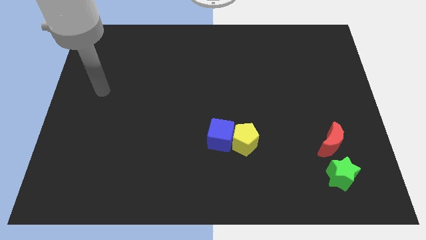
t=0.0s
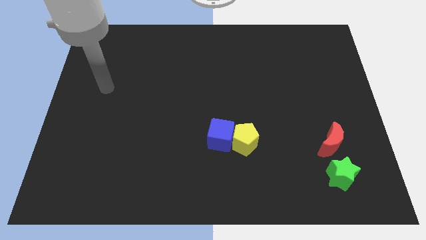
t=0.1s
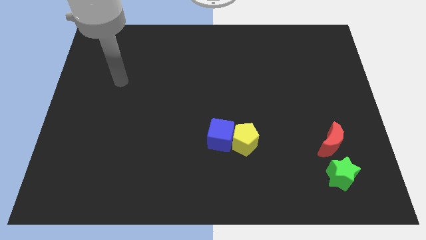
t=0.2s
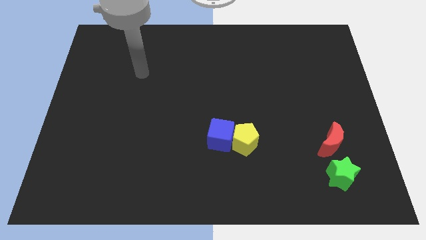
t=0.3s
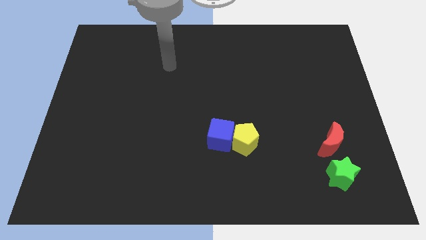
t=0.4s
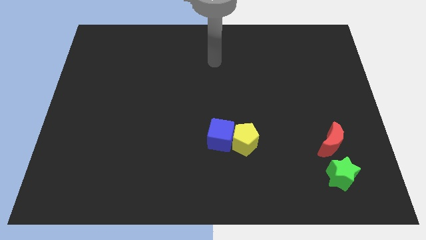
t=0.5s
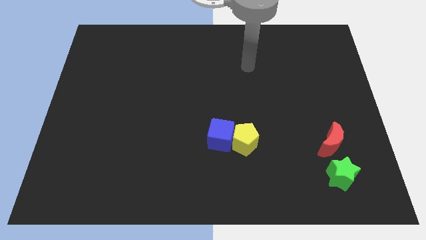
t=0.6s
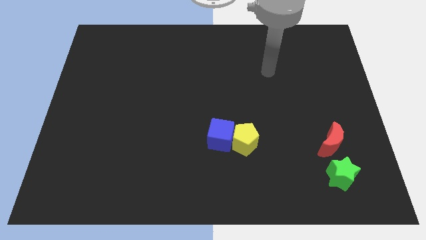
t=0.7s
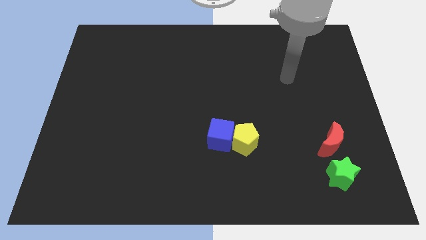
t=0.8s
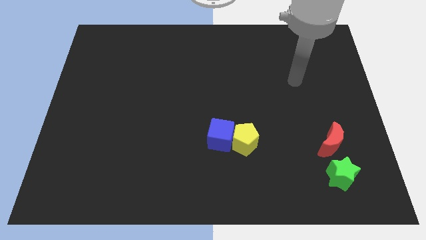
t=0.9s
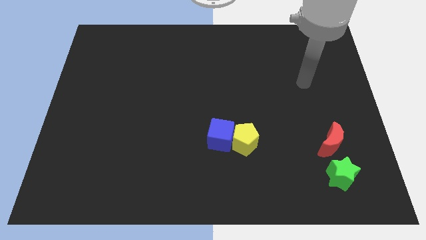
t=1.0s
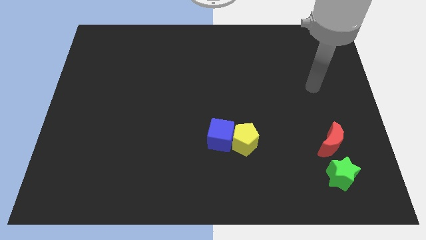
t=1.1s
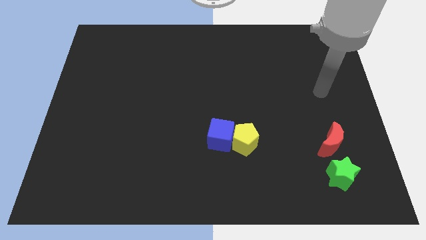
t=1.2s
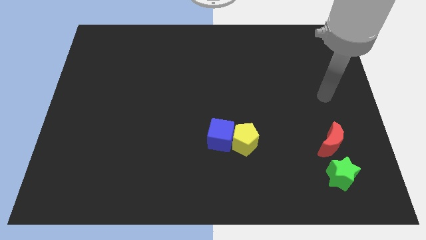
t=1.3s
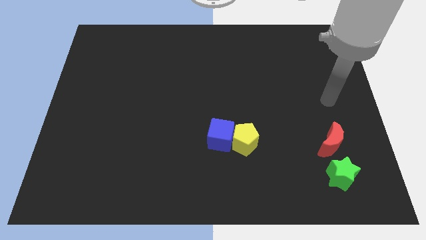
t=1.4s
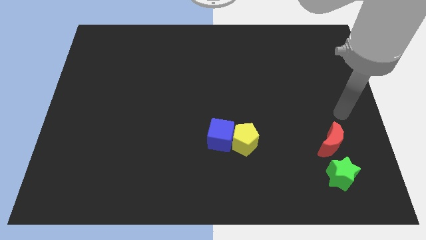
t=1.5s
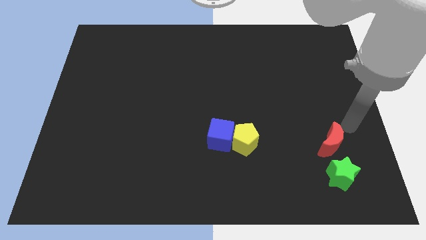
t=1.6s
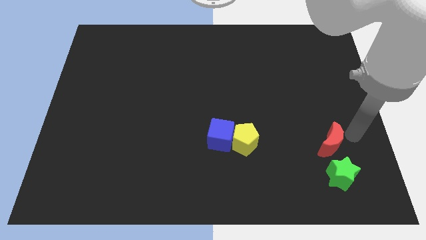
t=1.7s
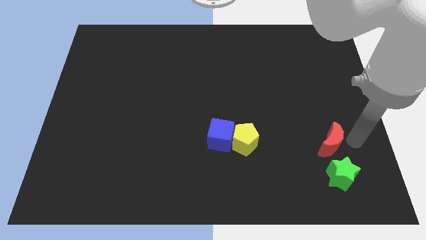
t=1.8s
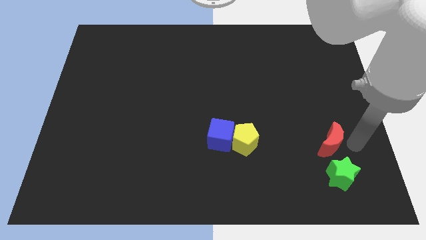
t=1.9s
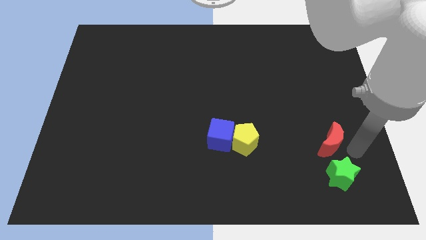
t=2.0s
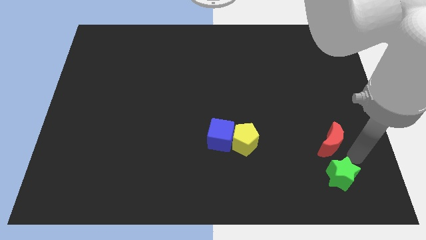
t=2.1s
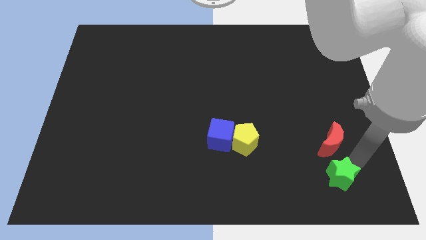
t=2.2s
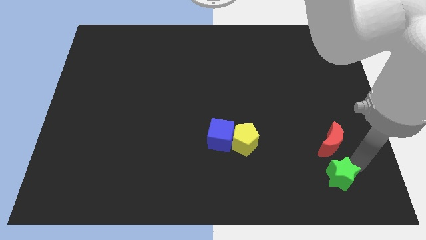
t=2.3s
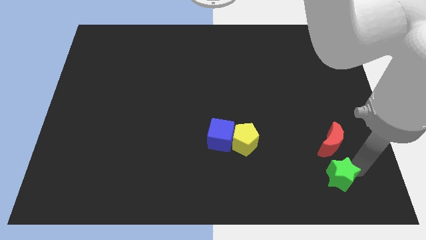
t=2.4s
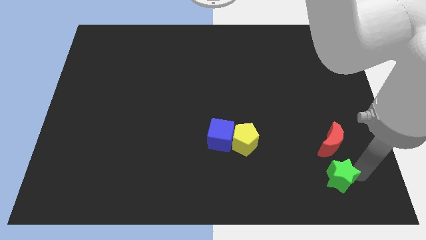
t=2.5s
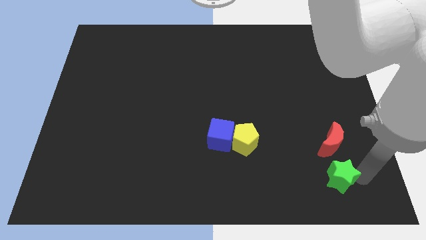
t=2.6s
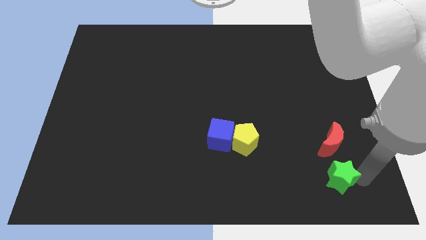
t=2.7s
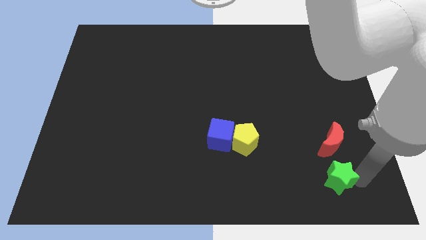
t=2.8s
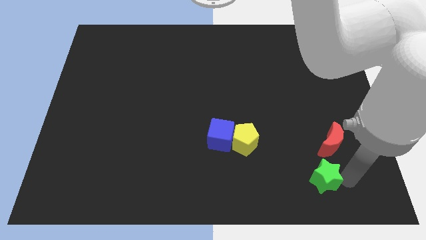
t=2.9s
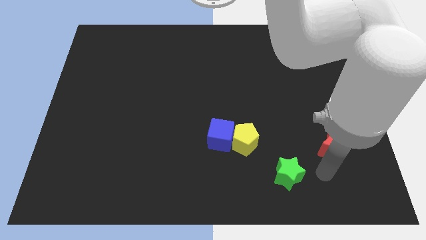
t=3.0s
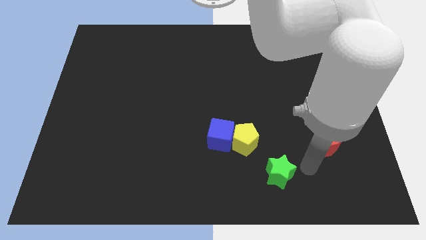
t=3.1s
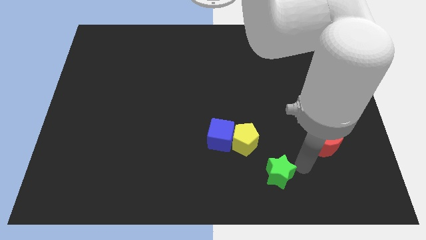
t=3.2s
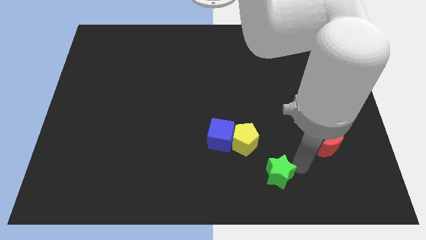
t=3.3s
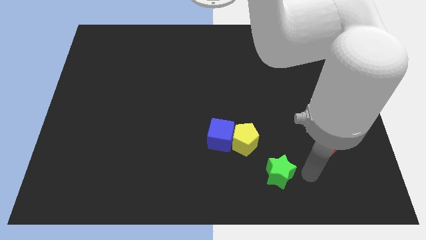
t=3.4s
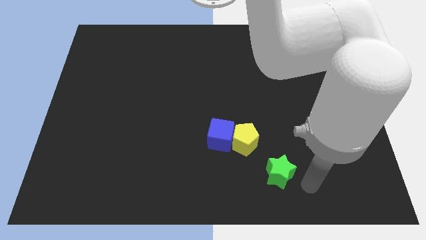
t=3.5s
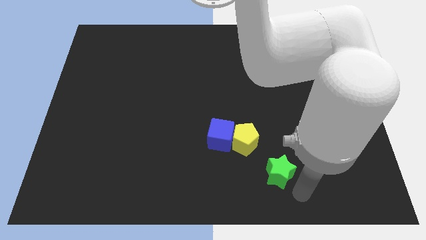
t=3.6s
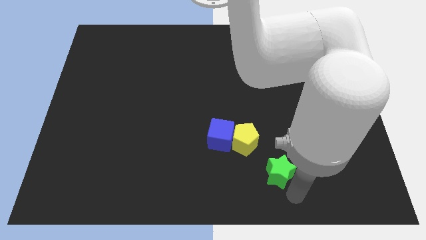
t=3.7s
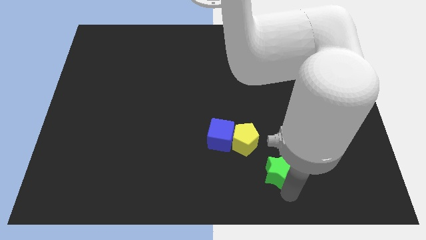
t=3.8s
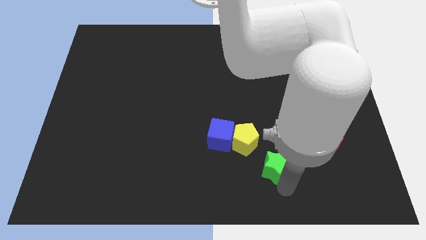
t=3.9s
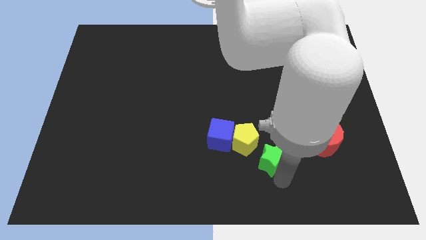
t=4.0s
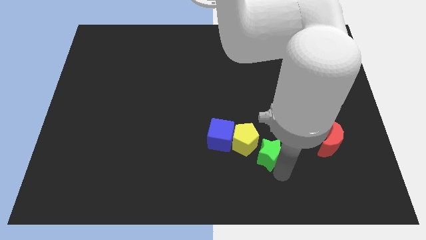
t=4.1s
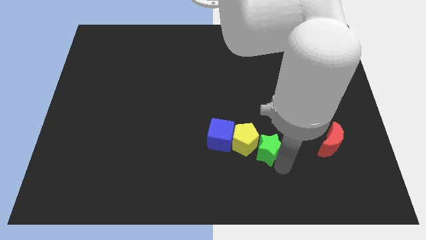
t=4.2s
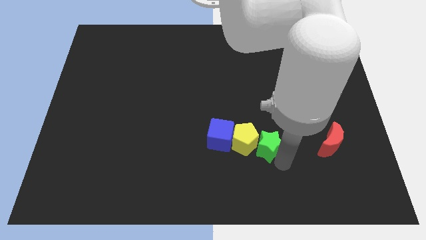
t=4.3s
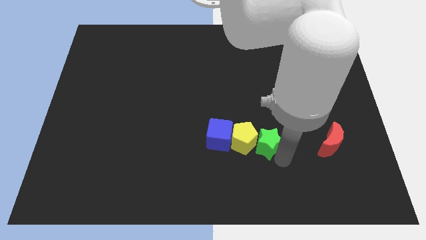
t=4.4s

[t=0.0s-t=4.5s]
push the star close to the pentagon

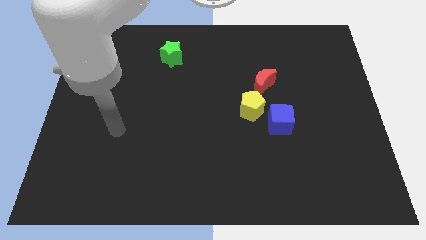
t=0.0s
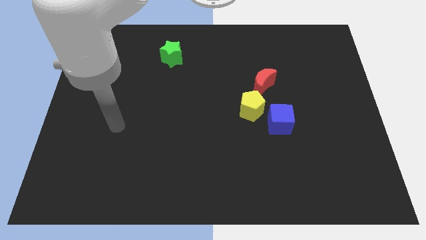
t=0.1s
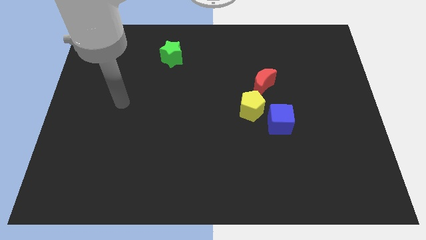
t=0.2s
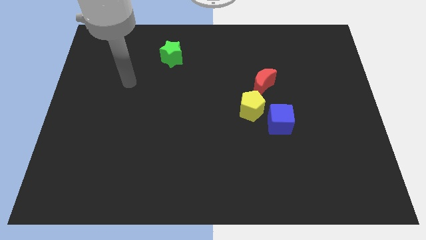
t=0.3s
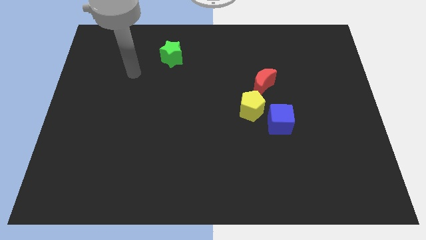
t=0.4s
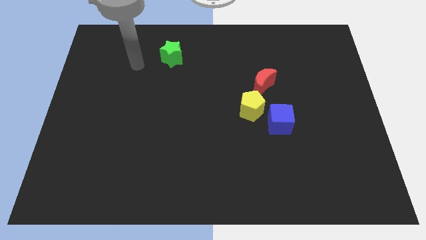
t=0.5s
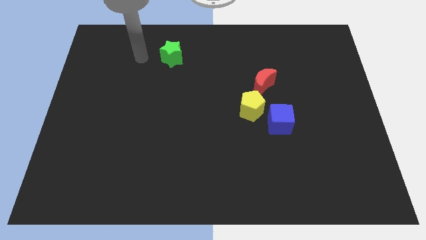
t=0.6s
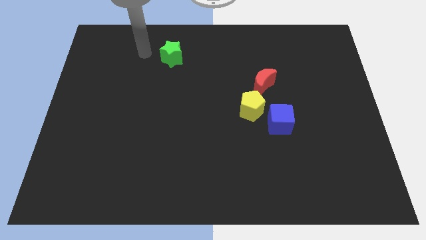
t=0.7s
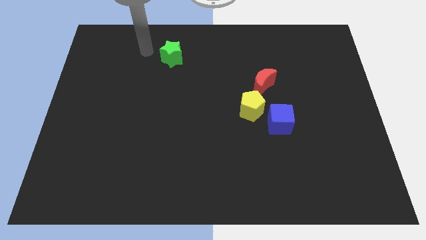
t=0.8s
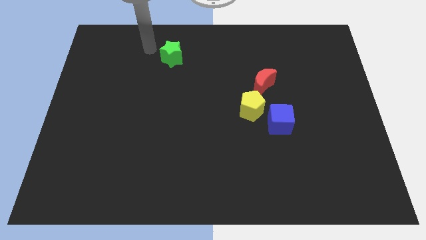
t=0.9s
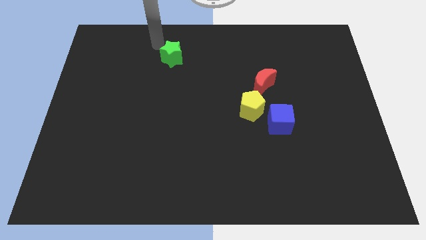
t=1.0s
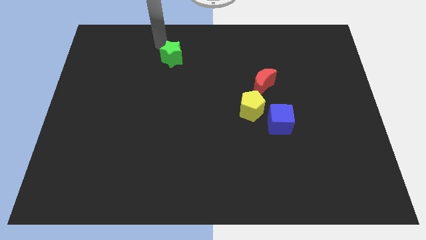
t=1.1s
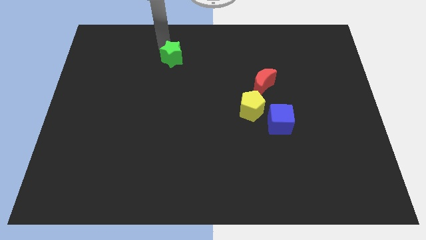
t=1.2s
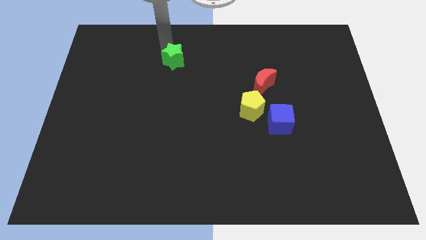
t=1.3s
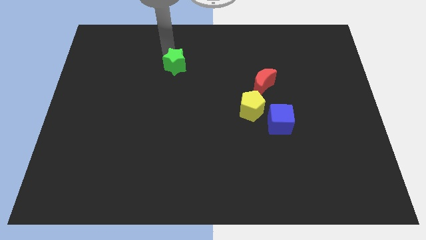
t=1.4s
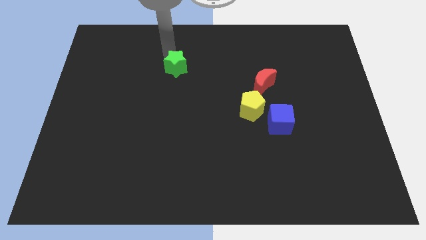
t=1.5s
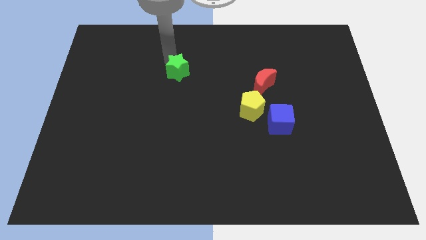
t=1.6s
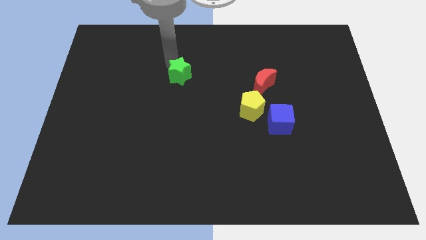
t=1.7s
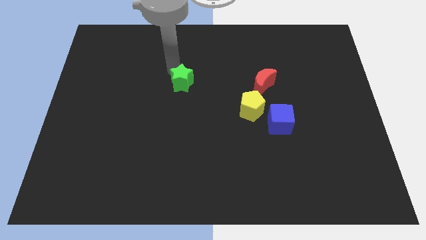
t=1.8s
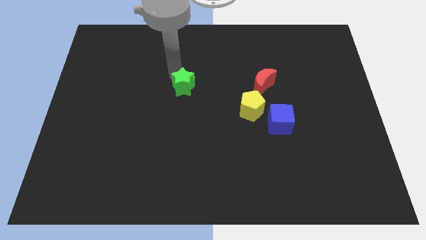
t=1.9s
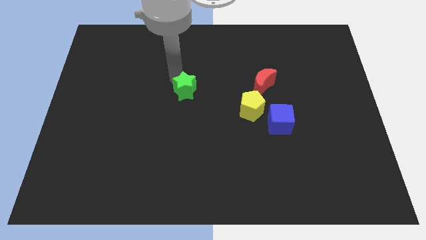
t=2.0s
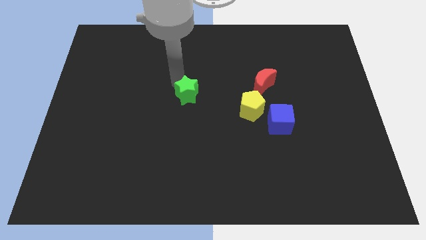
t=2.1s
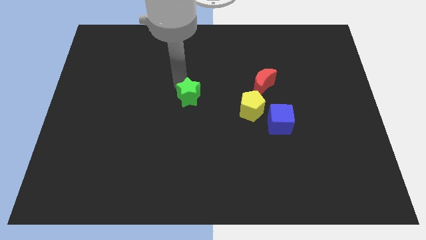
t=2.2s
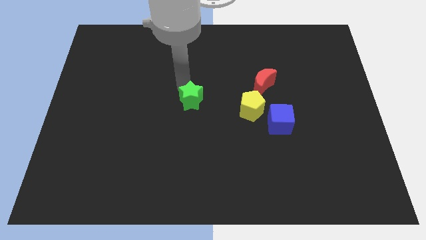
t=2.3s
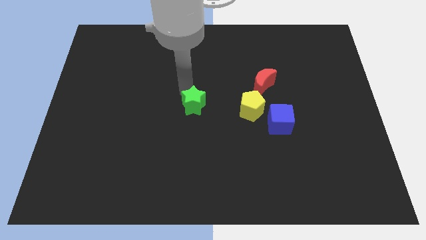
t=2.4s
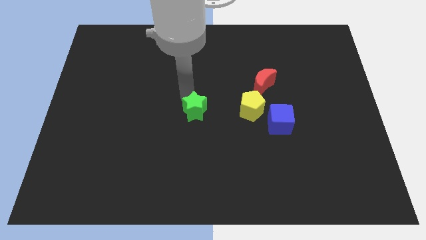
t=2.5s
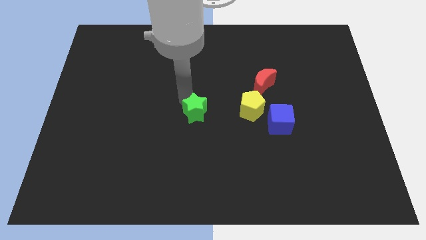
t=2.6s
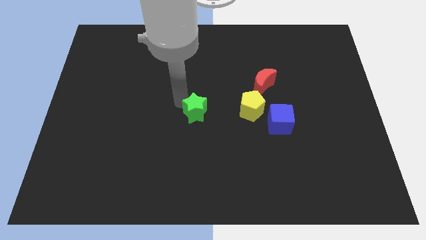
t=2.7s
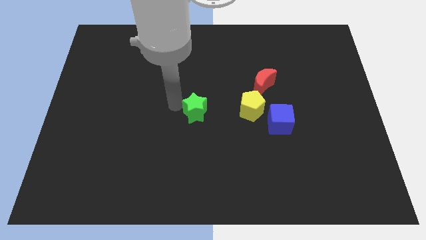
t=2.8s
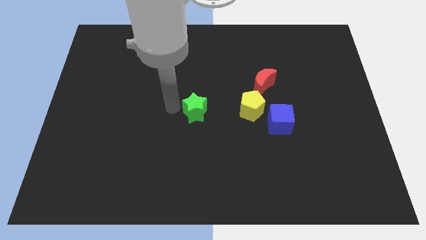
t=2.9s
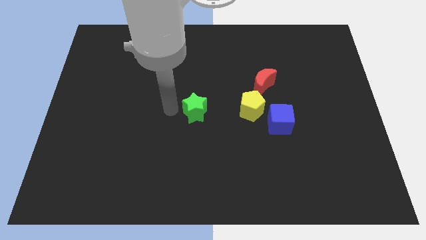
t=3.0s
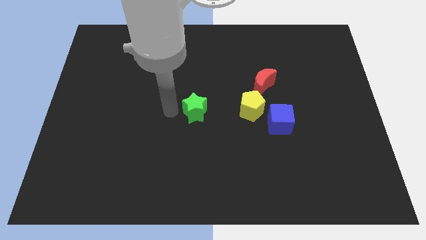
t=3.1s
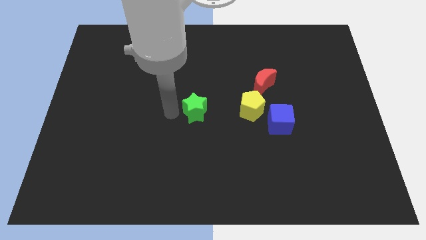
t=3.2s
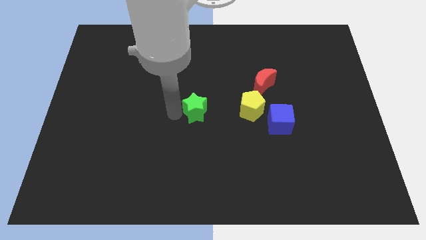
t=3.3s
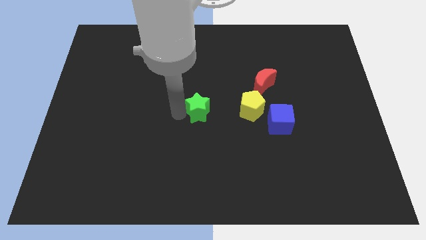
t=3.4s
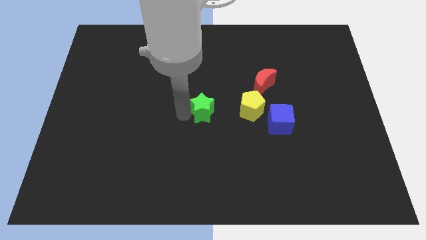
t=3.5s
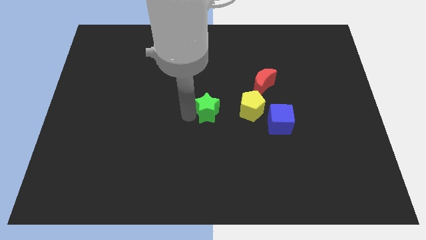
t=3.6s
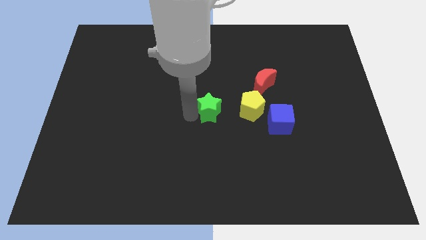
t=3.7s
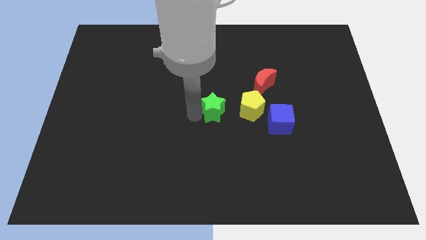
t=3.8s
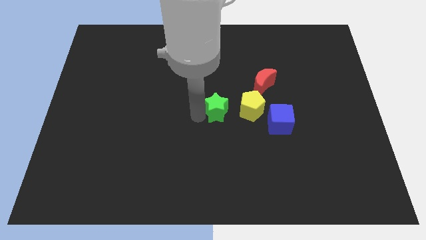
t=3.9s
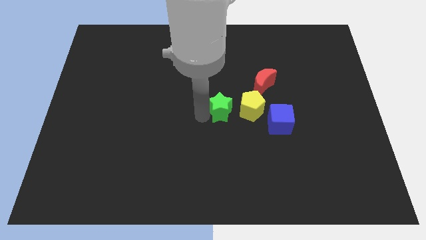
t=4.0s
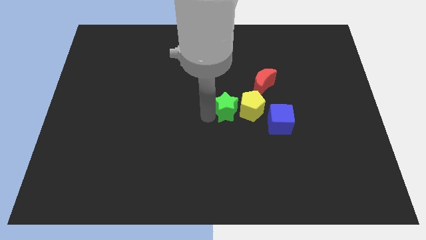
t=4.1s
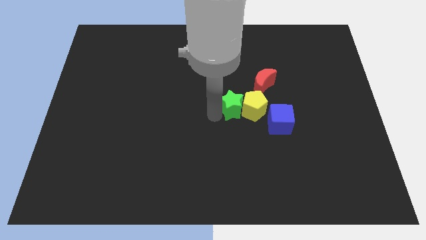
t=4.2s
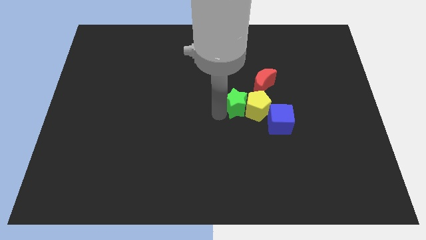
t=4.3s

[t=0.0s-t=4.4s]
push the green star to the pentagon
